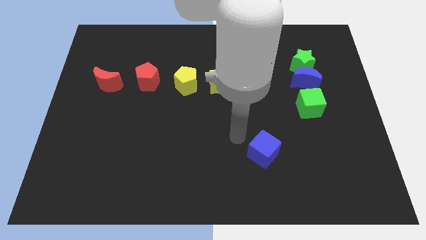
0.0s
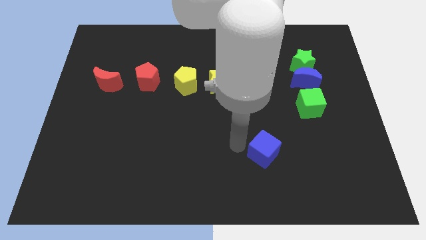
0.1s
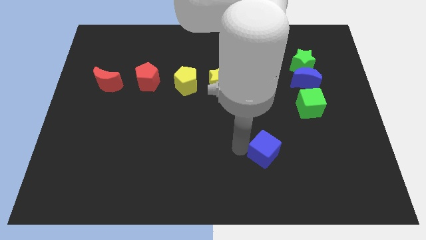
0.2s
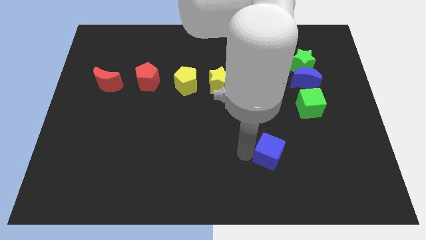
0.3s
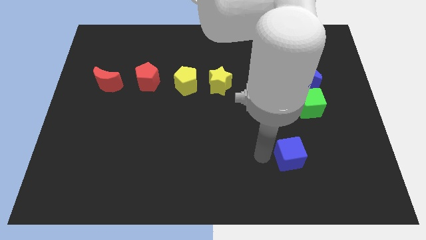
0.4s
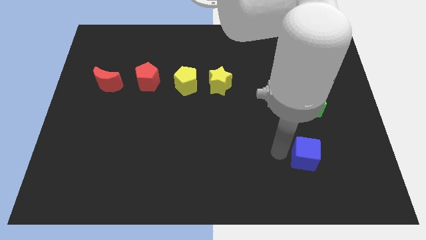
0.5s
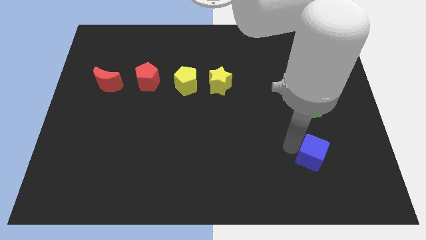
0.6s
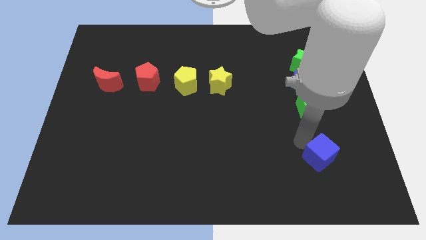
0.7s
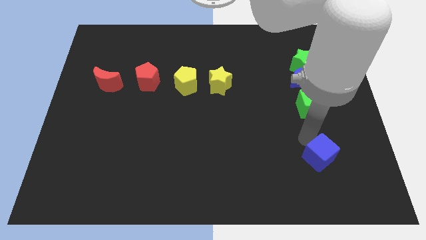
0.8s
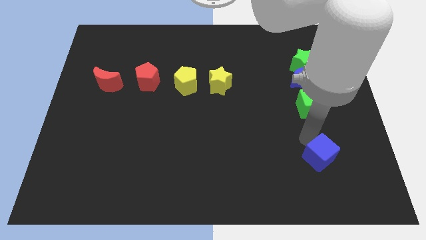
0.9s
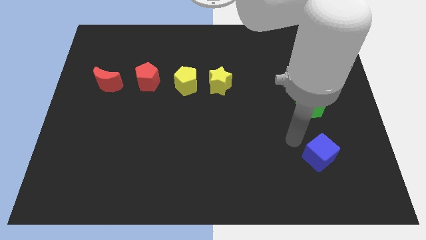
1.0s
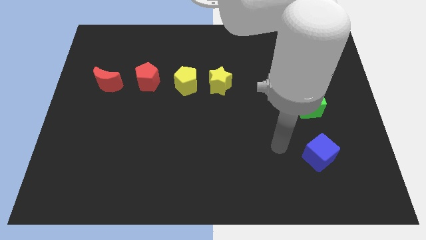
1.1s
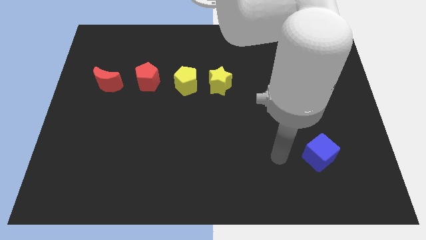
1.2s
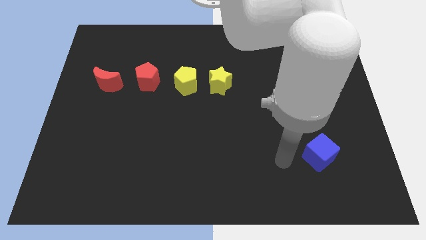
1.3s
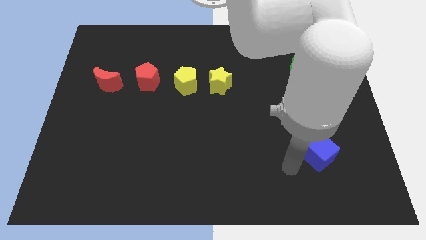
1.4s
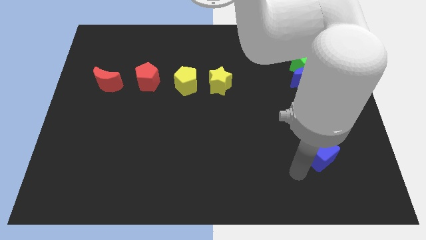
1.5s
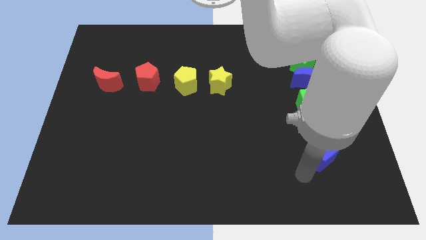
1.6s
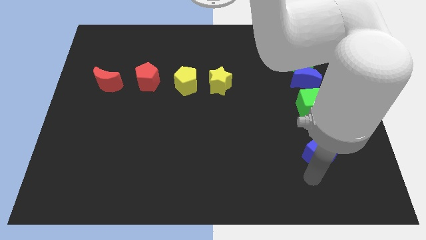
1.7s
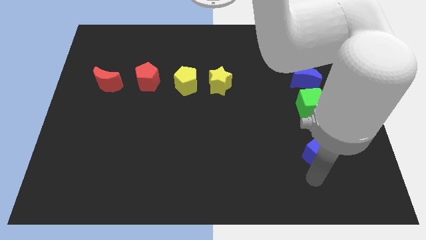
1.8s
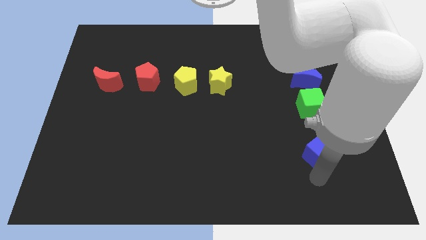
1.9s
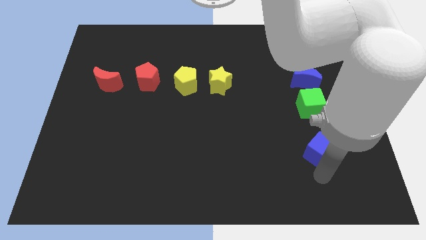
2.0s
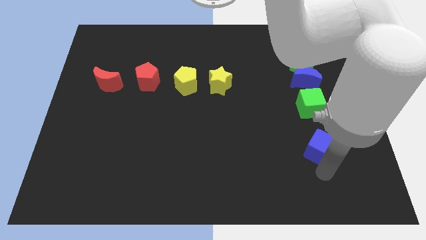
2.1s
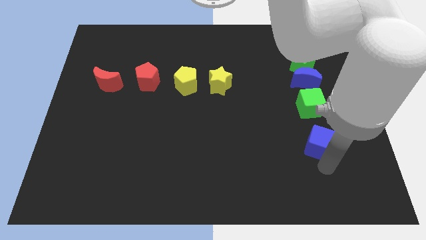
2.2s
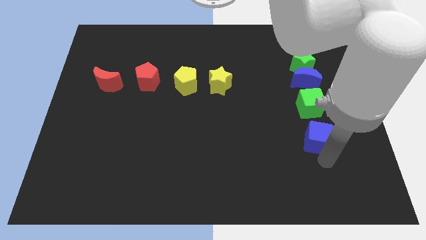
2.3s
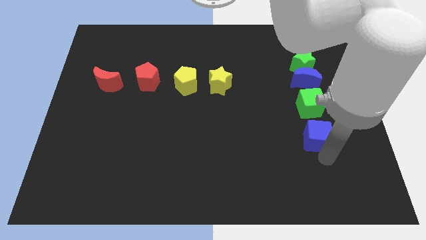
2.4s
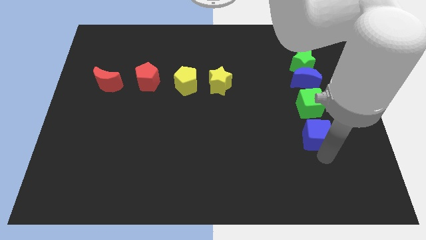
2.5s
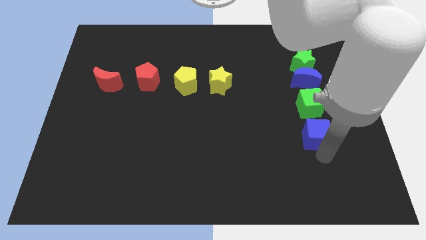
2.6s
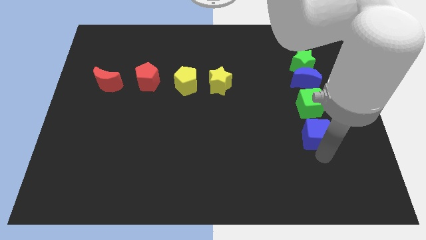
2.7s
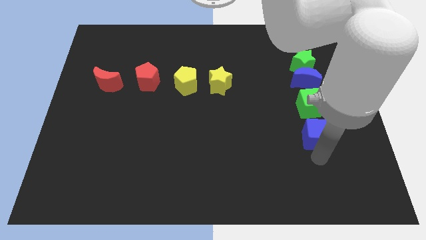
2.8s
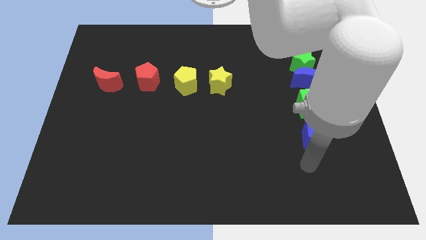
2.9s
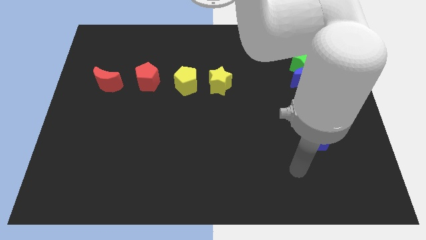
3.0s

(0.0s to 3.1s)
move blue cube to the bottom of green cube

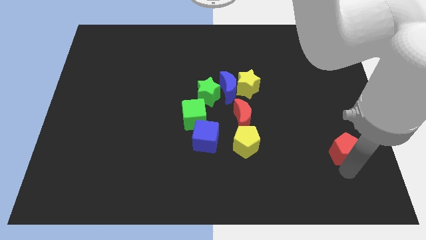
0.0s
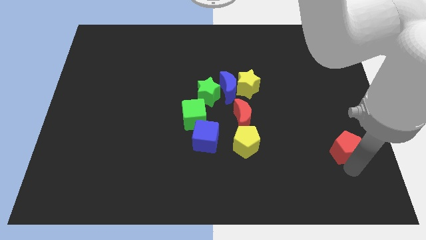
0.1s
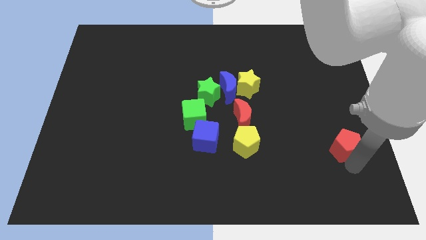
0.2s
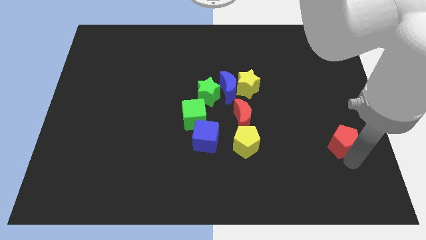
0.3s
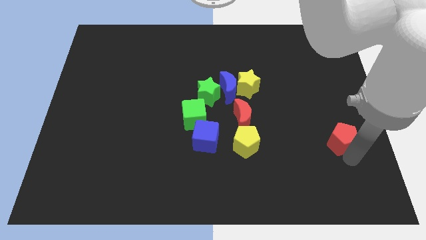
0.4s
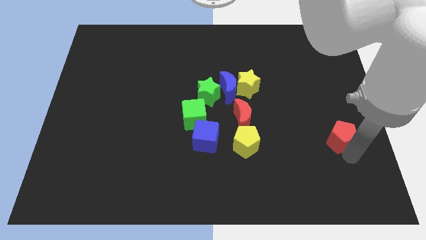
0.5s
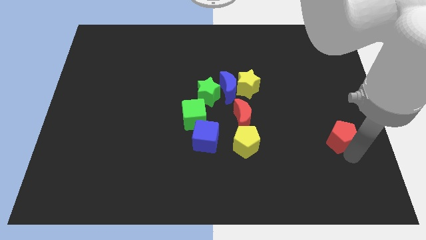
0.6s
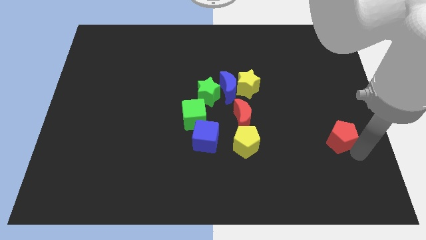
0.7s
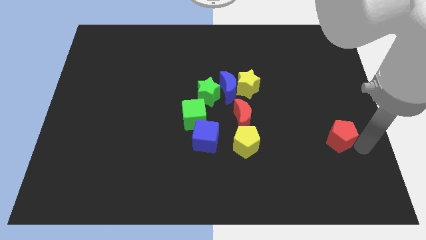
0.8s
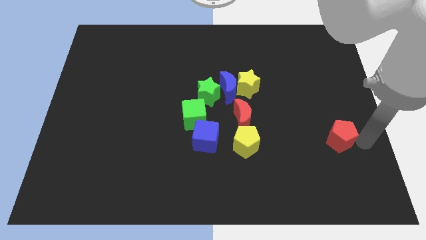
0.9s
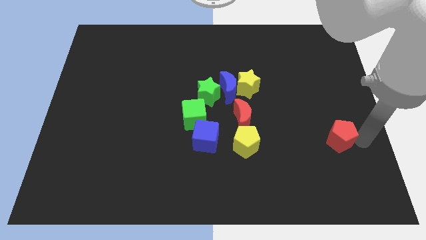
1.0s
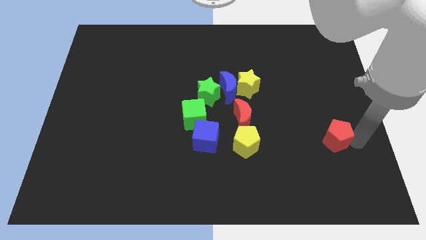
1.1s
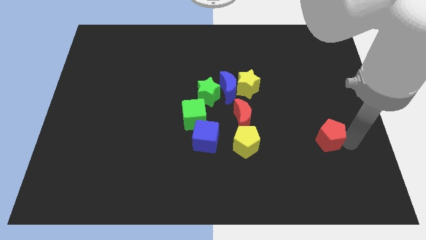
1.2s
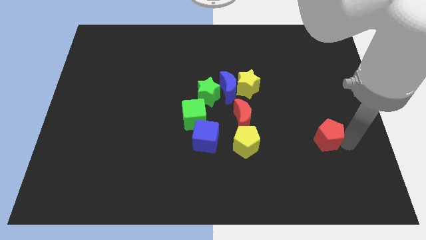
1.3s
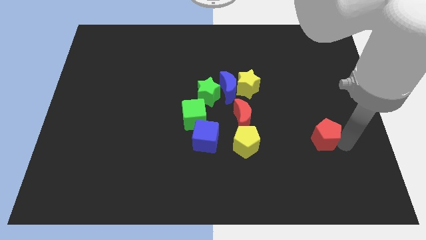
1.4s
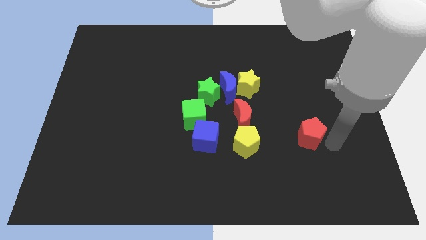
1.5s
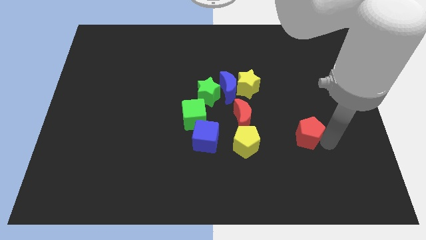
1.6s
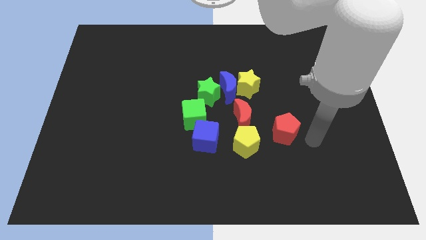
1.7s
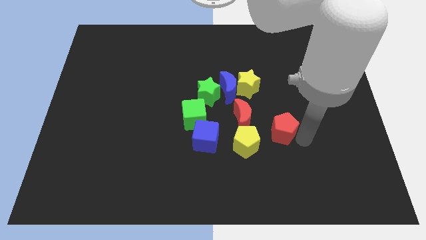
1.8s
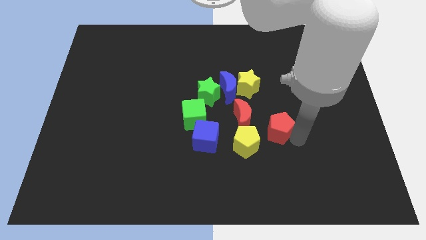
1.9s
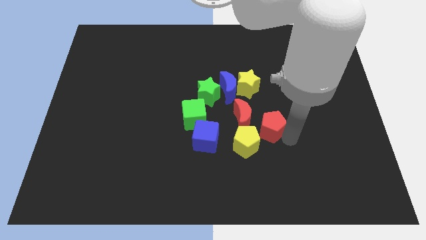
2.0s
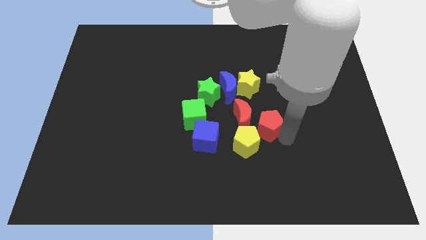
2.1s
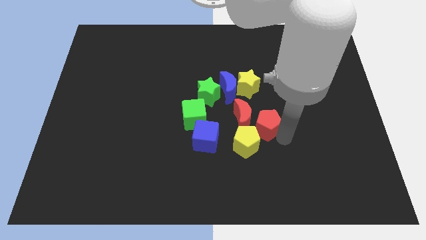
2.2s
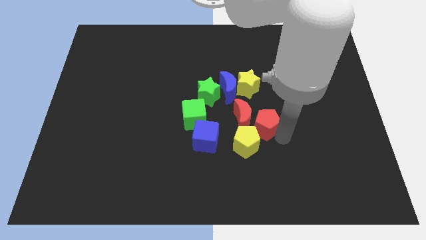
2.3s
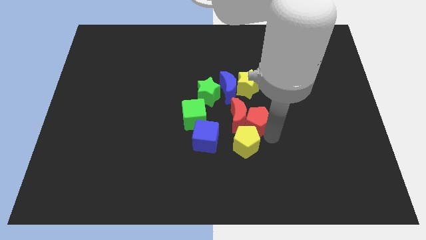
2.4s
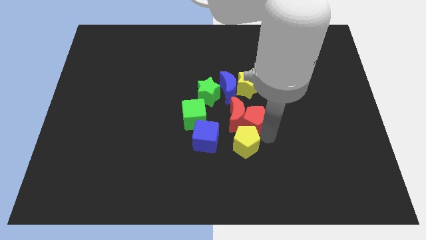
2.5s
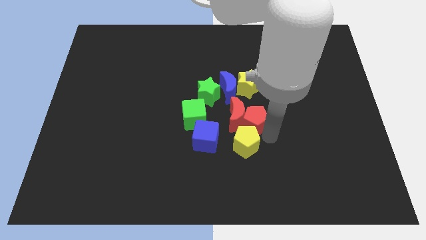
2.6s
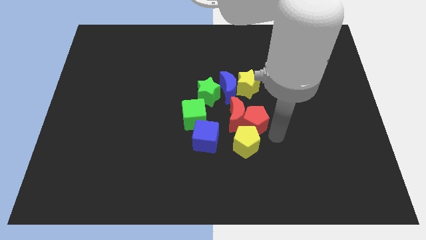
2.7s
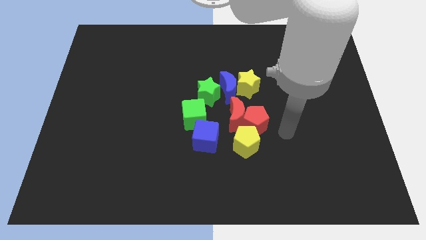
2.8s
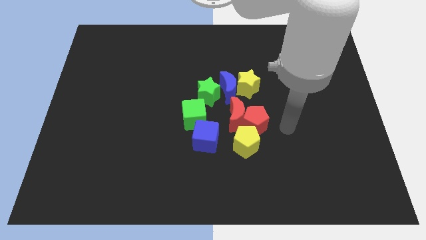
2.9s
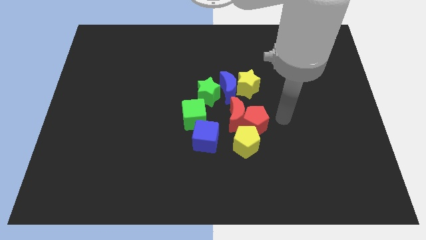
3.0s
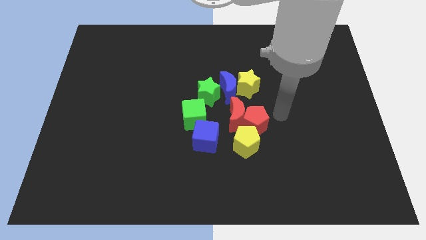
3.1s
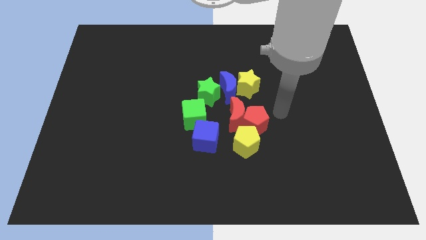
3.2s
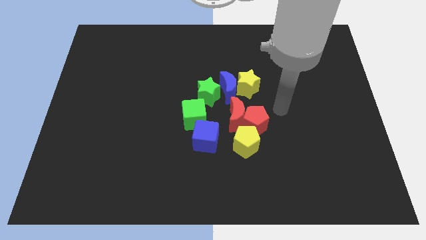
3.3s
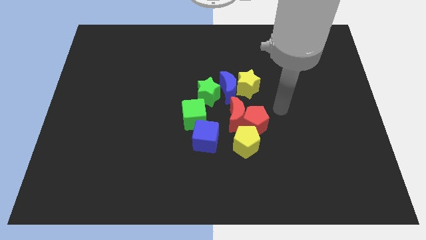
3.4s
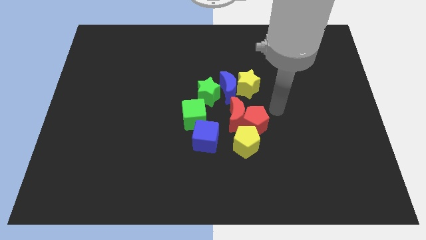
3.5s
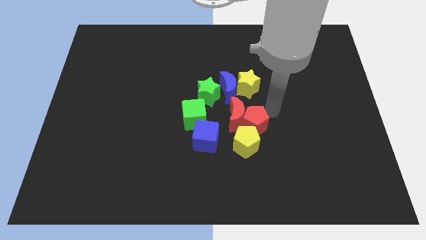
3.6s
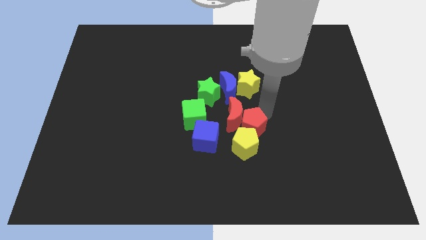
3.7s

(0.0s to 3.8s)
move the red pentagon towards the red crescent

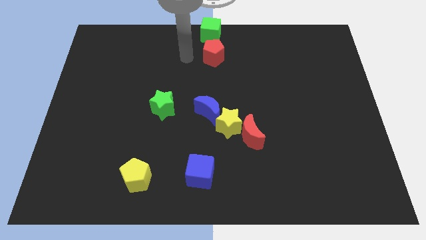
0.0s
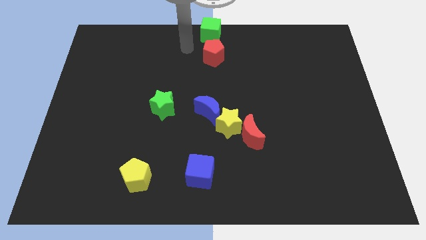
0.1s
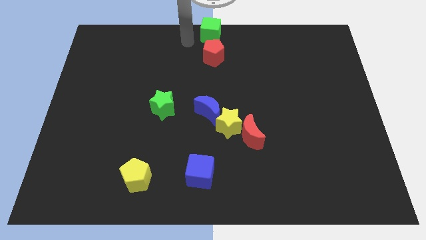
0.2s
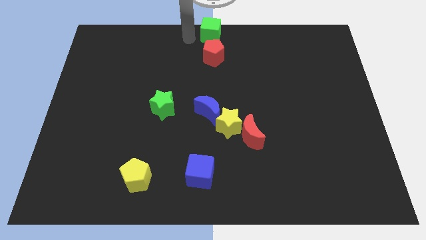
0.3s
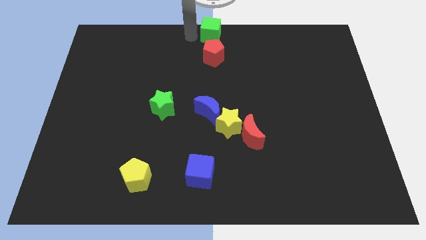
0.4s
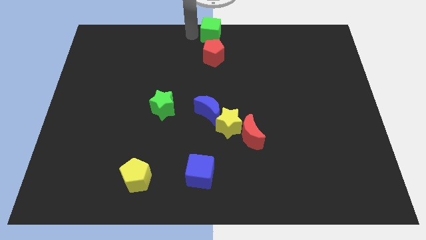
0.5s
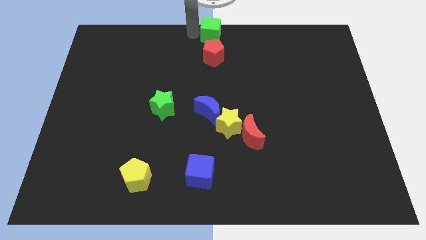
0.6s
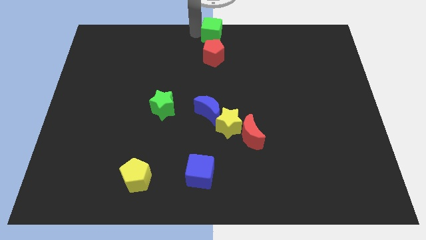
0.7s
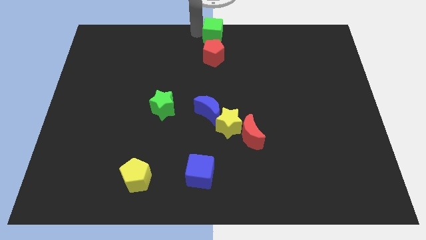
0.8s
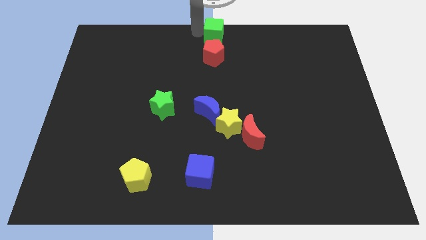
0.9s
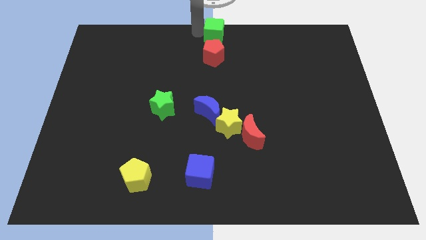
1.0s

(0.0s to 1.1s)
touch the top left side of green cube

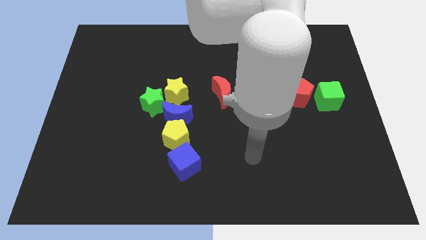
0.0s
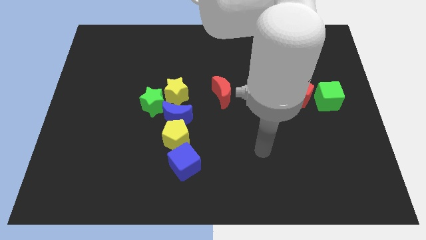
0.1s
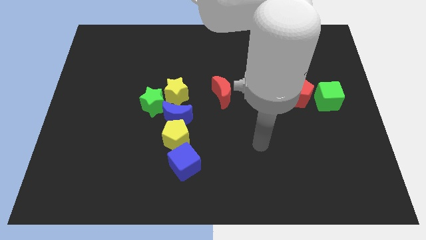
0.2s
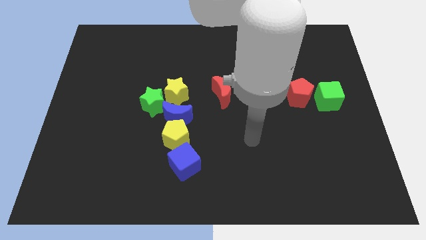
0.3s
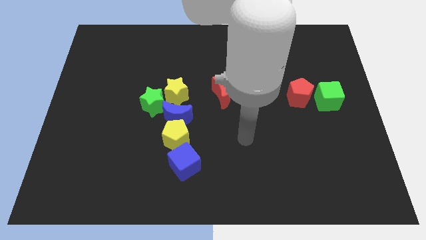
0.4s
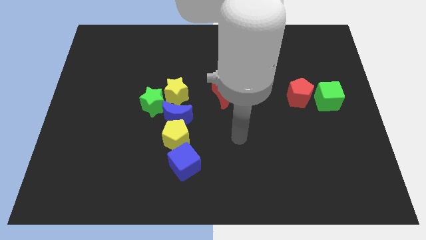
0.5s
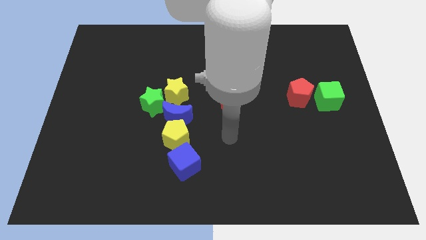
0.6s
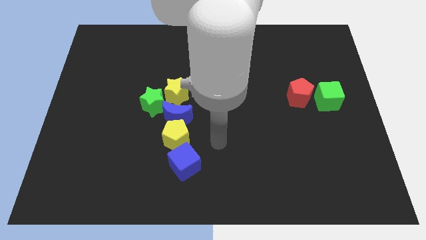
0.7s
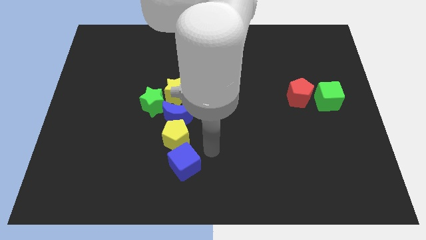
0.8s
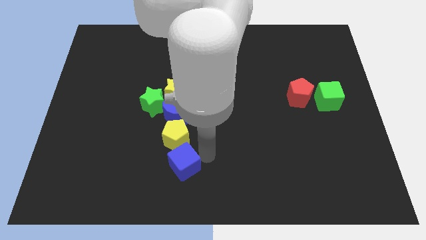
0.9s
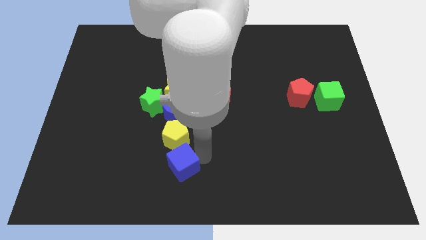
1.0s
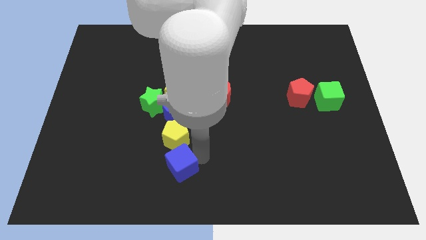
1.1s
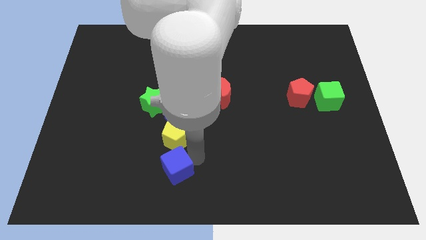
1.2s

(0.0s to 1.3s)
push arm on the right side of blue cube
